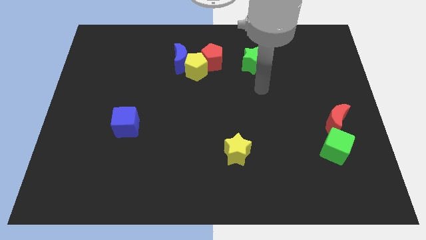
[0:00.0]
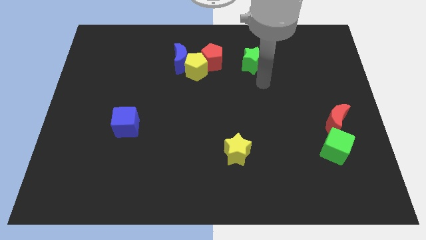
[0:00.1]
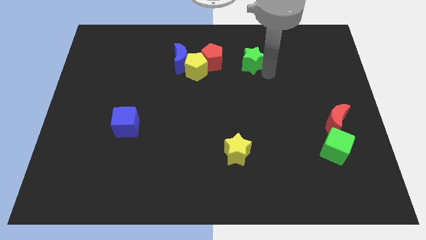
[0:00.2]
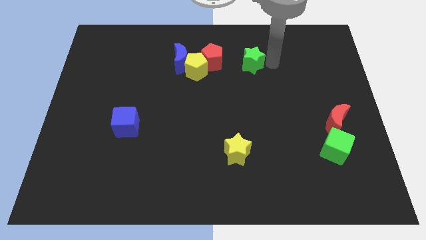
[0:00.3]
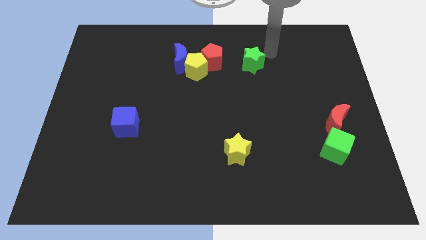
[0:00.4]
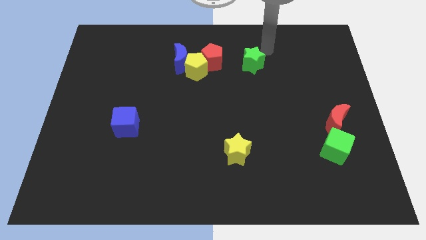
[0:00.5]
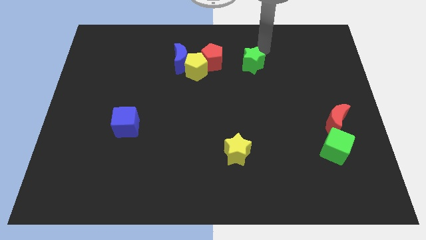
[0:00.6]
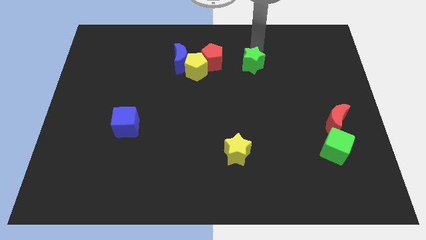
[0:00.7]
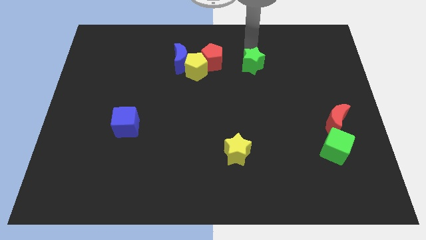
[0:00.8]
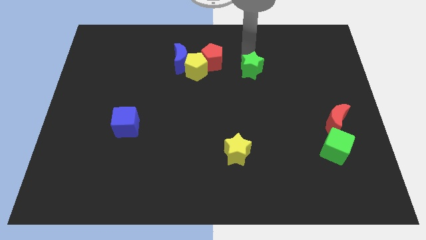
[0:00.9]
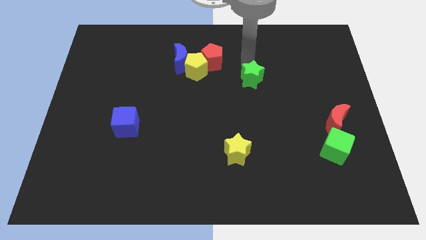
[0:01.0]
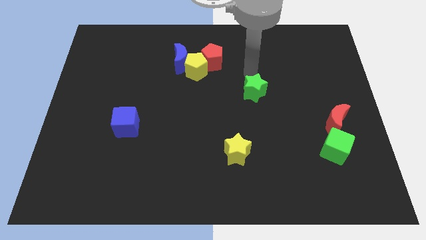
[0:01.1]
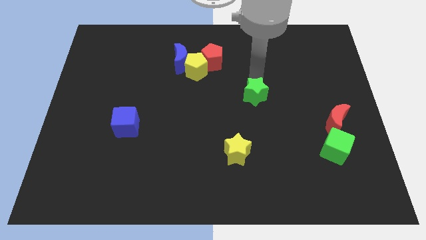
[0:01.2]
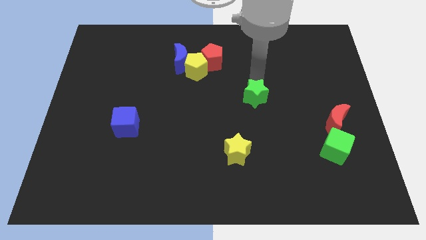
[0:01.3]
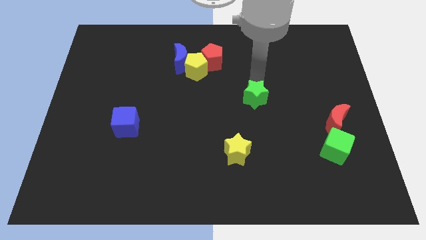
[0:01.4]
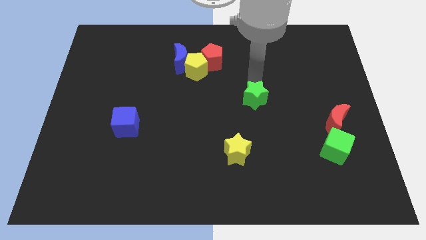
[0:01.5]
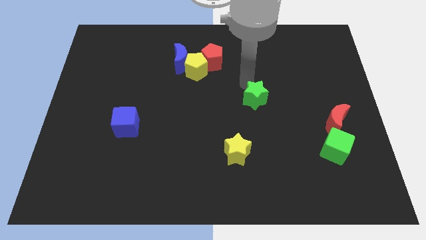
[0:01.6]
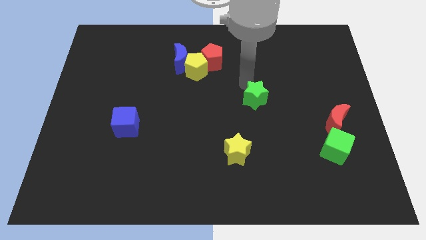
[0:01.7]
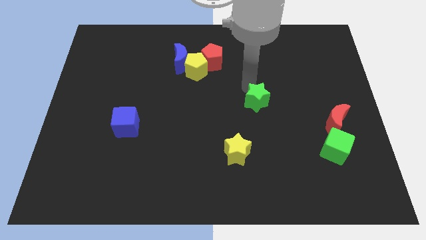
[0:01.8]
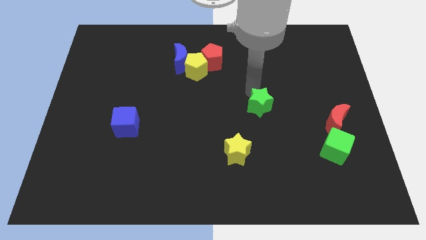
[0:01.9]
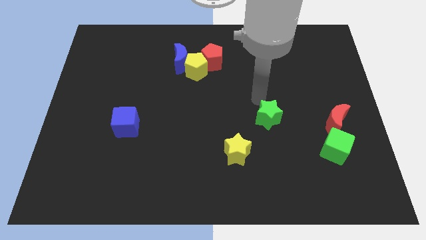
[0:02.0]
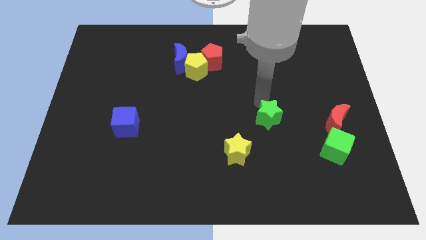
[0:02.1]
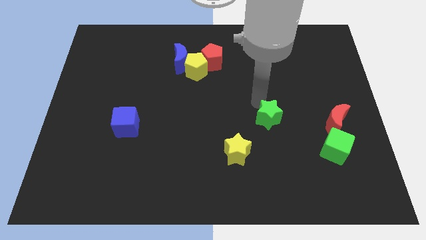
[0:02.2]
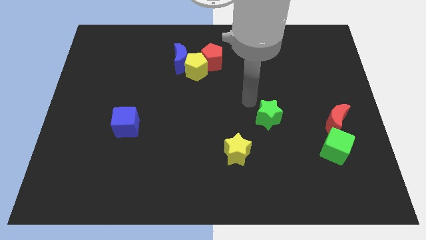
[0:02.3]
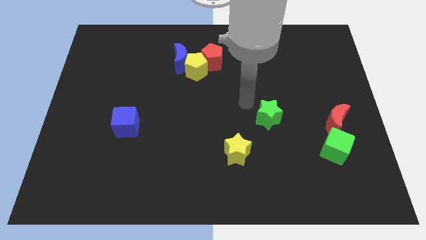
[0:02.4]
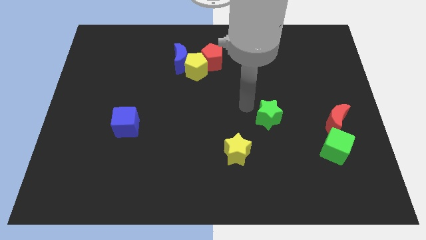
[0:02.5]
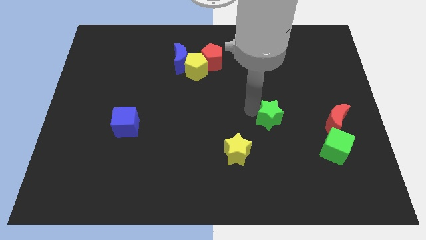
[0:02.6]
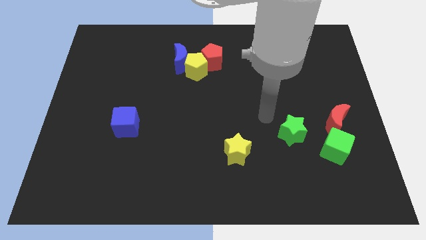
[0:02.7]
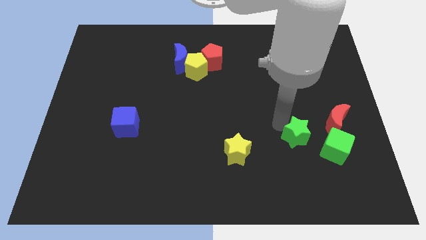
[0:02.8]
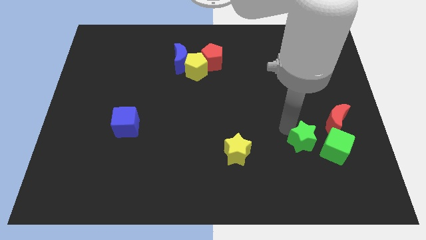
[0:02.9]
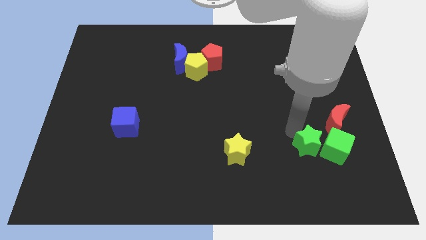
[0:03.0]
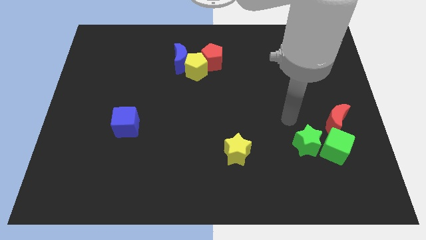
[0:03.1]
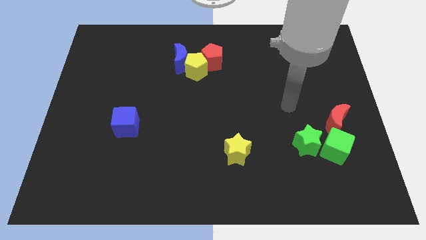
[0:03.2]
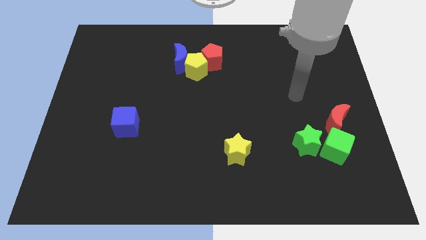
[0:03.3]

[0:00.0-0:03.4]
push the green star to the left of the red crescent

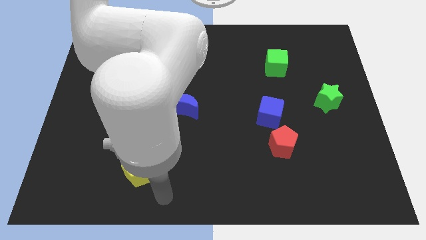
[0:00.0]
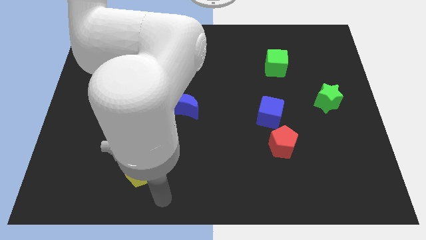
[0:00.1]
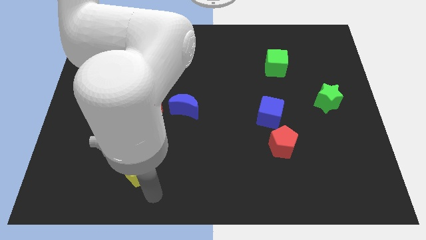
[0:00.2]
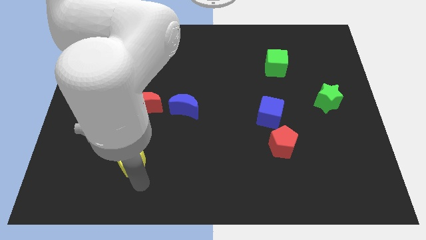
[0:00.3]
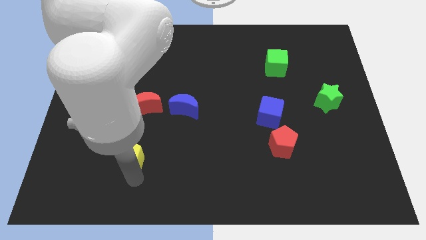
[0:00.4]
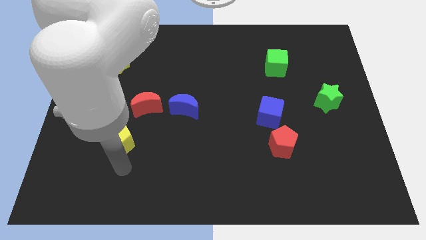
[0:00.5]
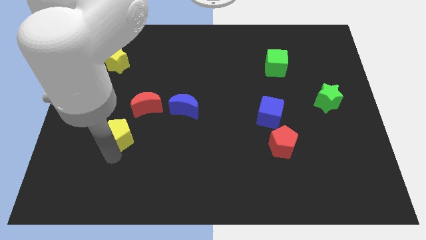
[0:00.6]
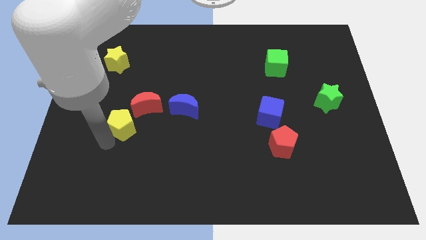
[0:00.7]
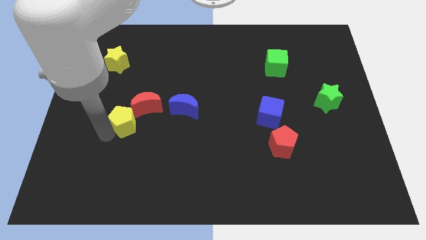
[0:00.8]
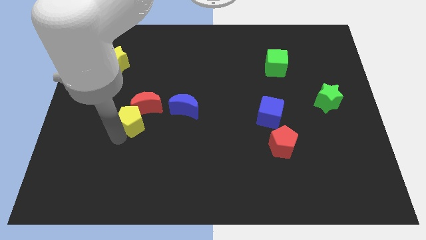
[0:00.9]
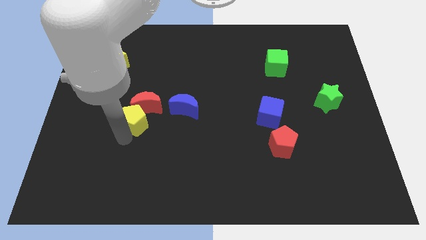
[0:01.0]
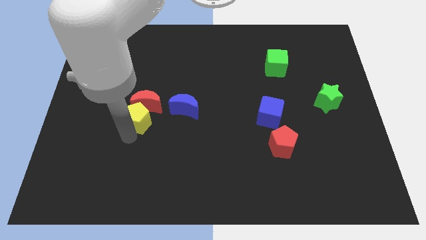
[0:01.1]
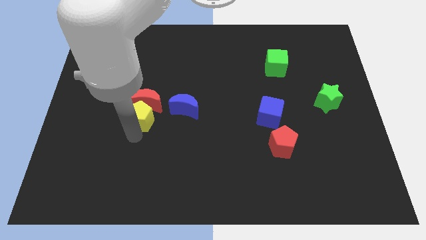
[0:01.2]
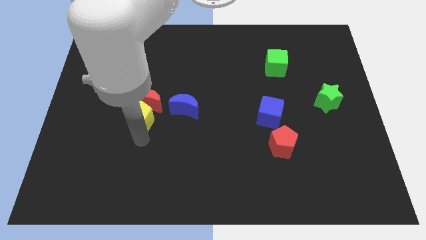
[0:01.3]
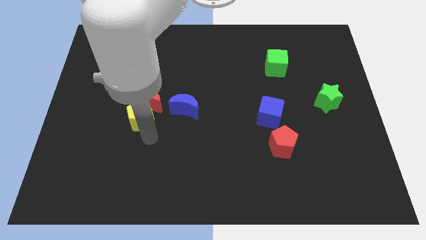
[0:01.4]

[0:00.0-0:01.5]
place the yellow pentagon below the red moon

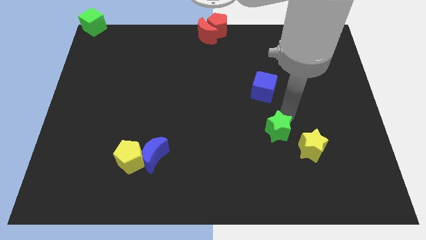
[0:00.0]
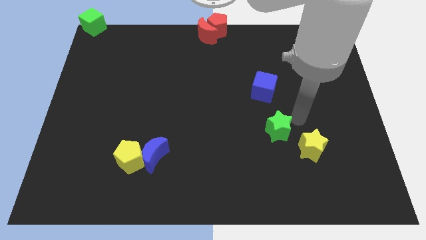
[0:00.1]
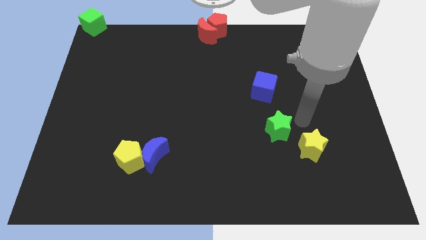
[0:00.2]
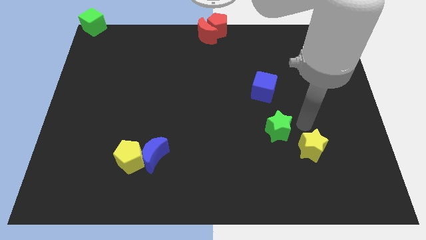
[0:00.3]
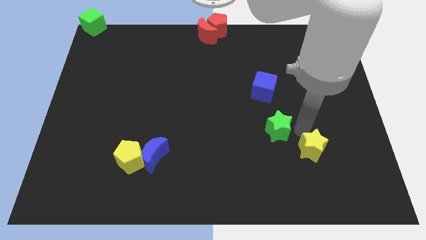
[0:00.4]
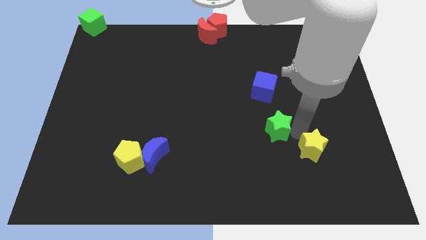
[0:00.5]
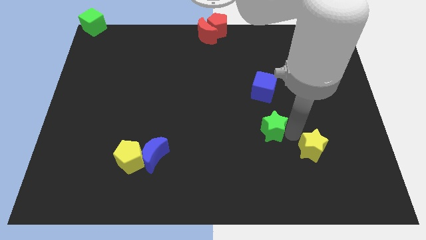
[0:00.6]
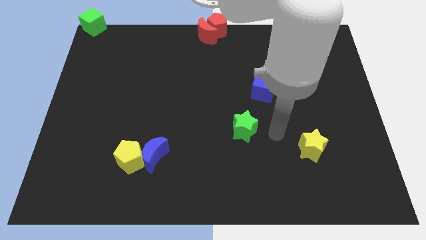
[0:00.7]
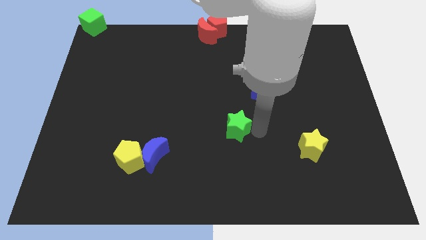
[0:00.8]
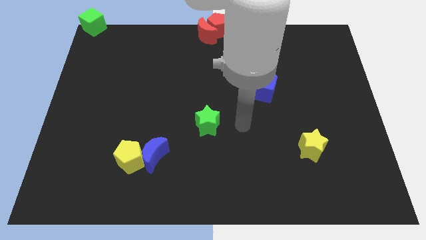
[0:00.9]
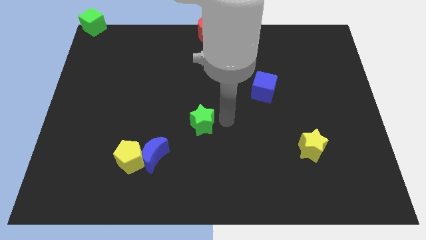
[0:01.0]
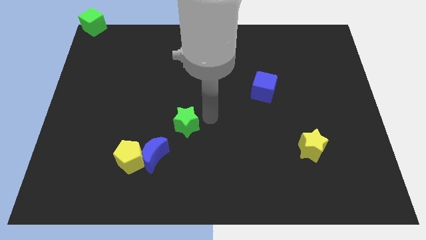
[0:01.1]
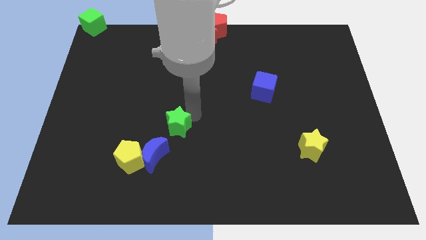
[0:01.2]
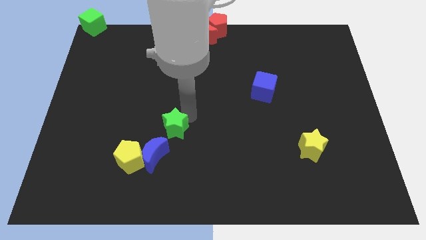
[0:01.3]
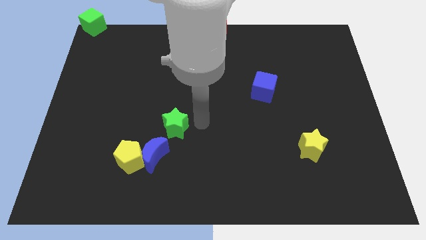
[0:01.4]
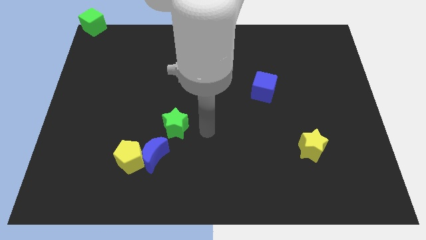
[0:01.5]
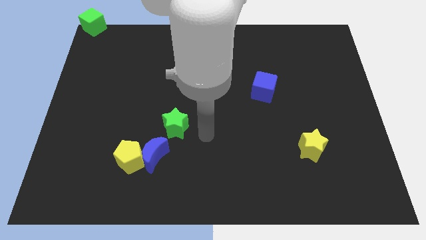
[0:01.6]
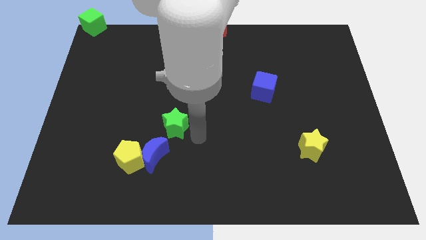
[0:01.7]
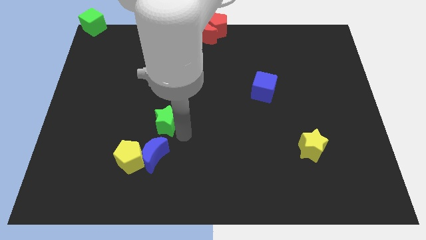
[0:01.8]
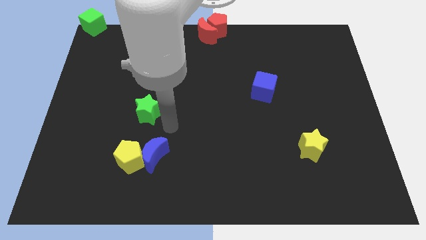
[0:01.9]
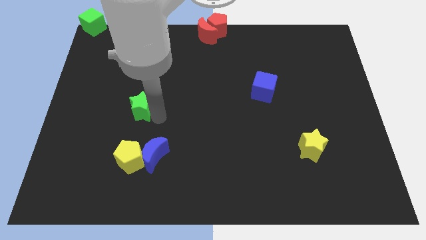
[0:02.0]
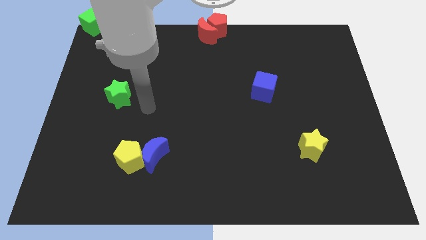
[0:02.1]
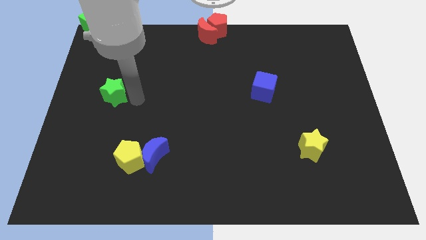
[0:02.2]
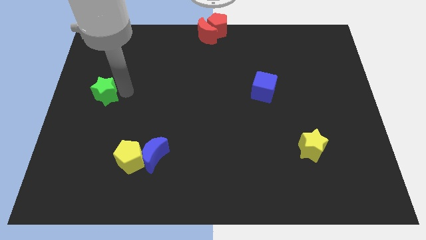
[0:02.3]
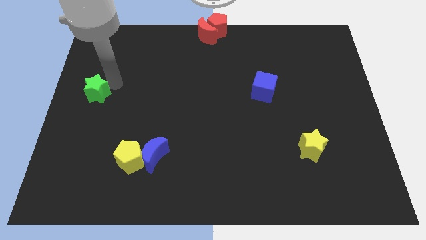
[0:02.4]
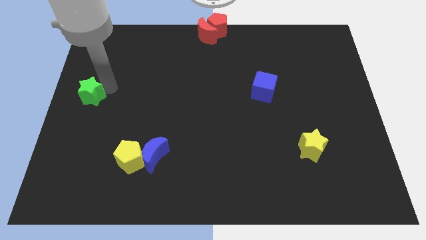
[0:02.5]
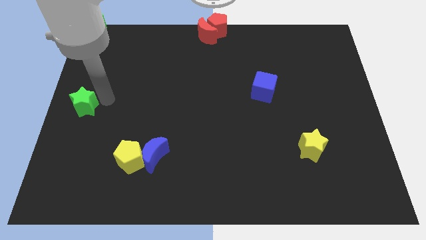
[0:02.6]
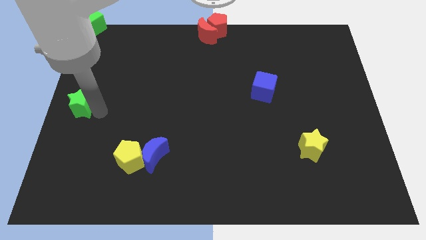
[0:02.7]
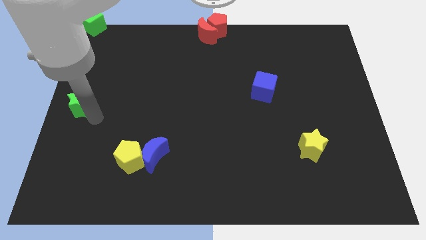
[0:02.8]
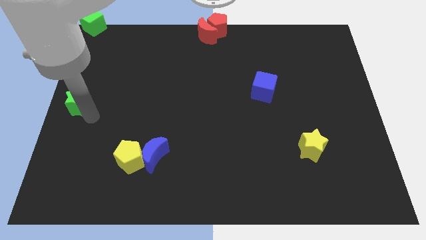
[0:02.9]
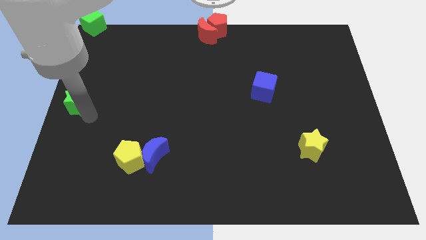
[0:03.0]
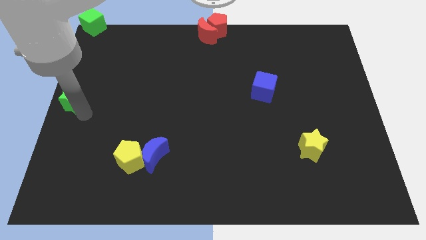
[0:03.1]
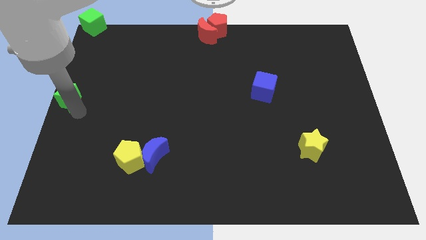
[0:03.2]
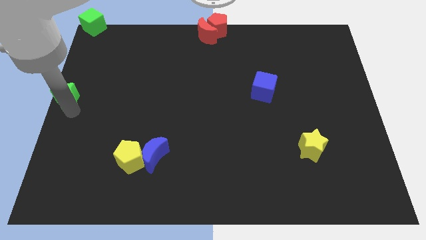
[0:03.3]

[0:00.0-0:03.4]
move the green star towards the left centre of the board

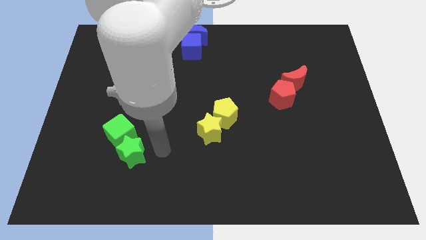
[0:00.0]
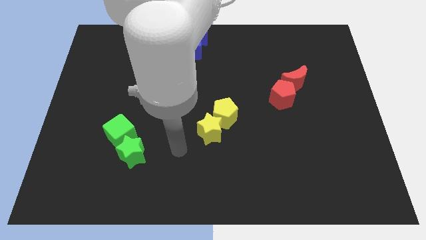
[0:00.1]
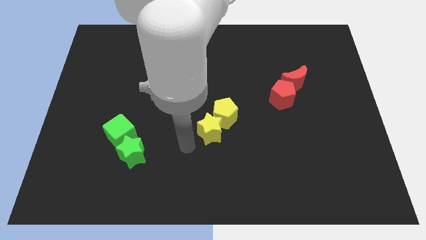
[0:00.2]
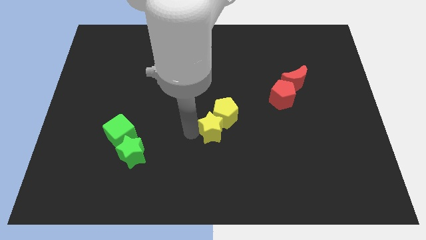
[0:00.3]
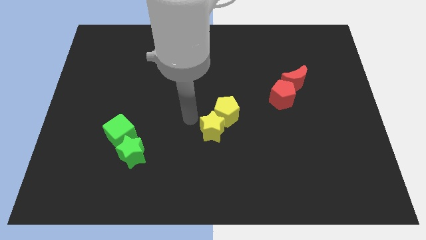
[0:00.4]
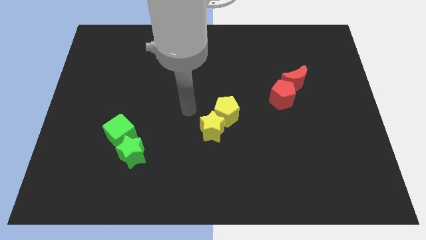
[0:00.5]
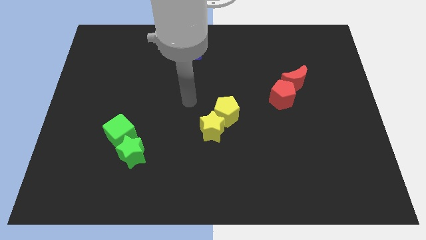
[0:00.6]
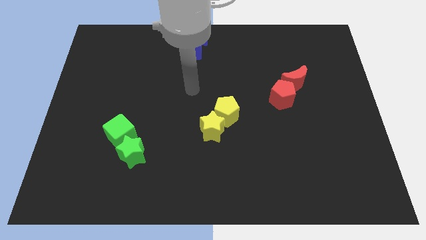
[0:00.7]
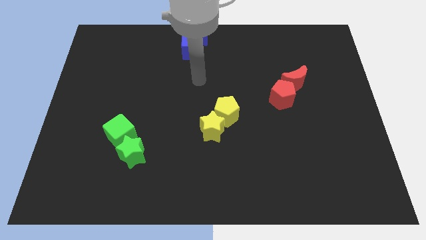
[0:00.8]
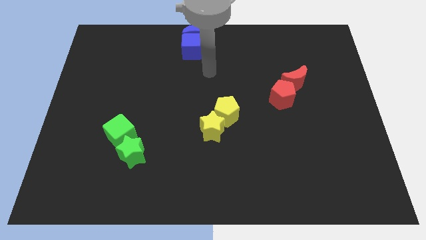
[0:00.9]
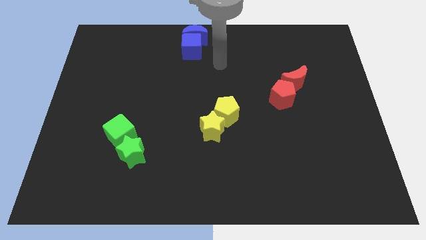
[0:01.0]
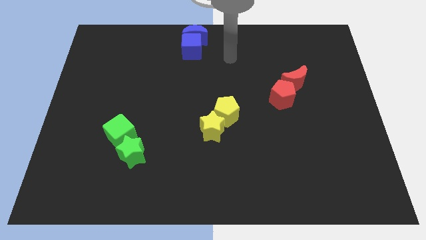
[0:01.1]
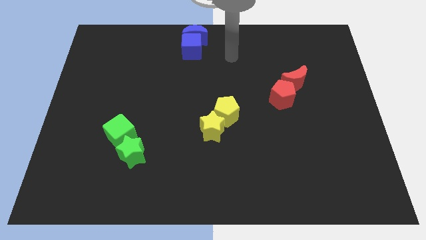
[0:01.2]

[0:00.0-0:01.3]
slightly push the yellow blocks towards the right side of the board
